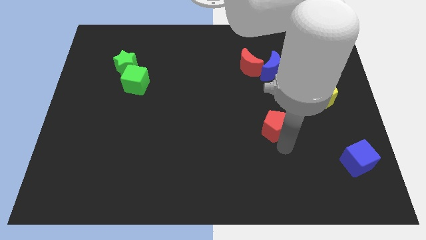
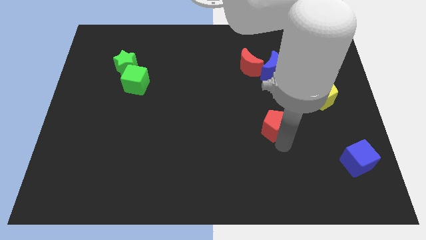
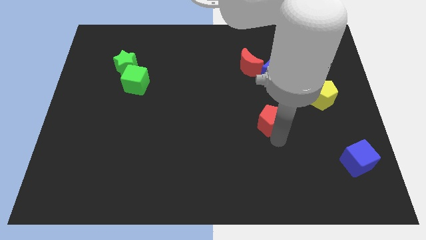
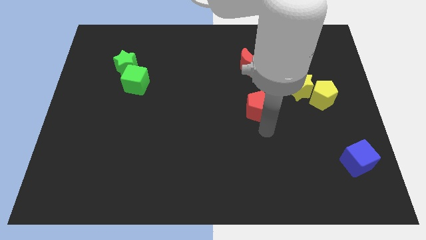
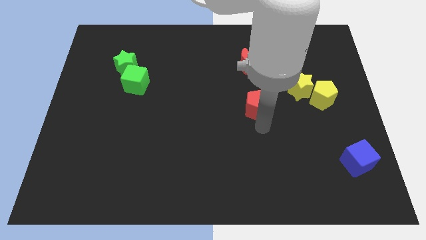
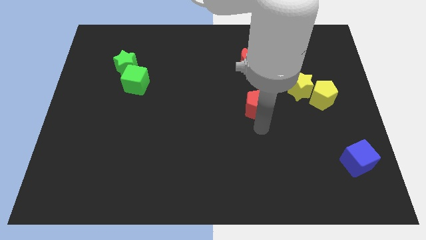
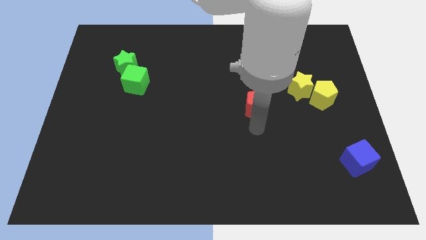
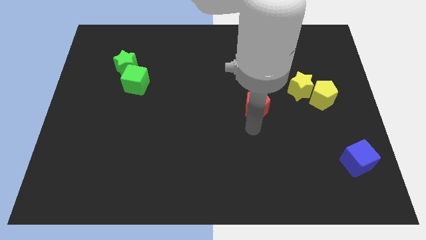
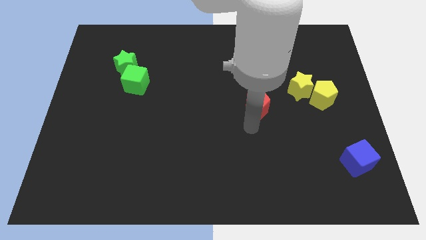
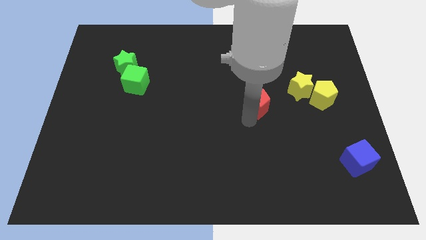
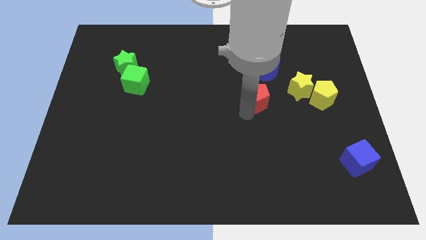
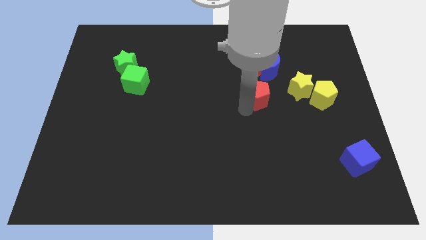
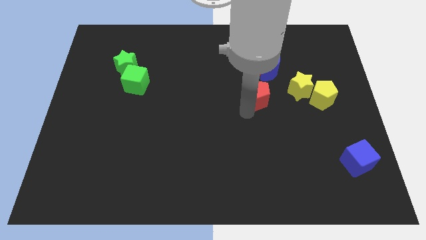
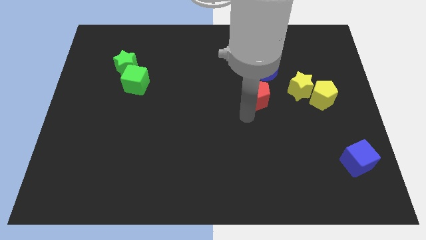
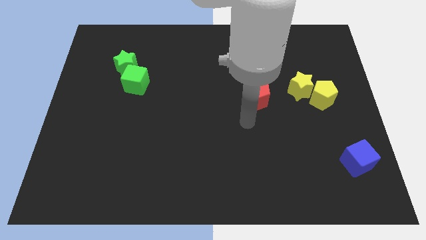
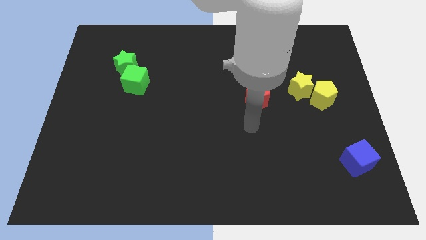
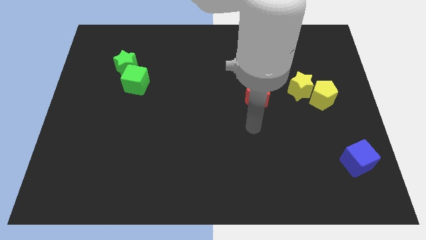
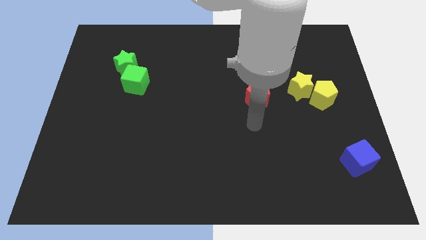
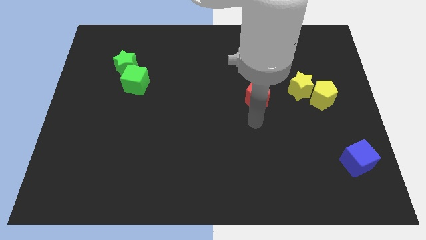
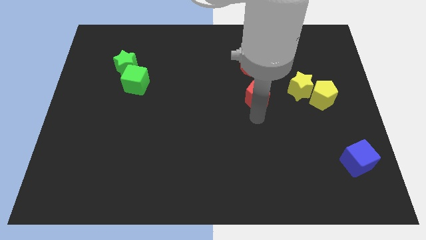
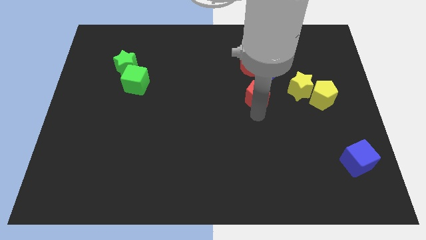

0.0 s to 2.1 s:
drag the red pentagon towards top side

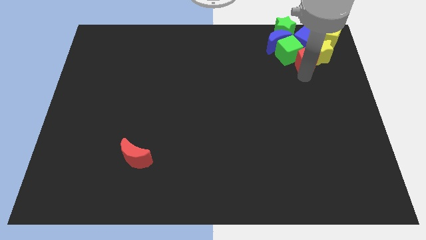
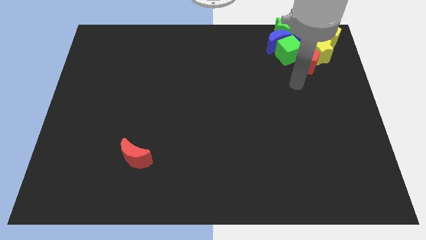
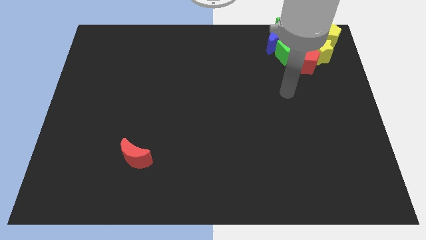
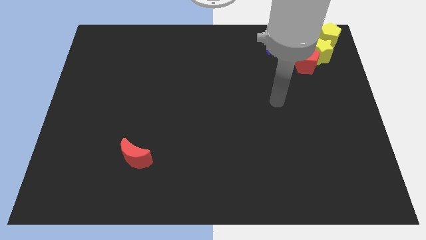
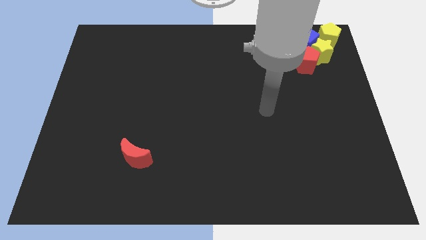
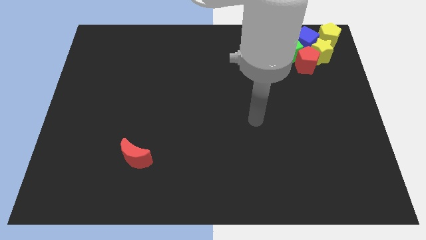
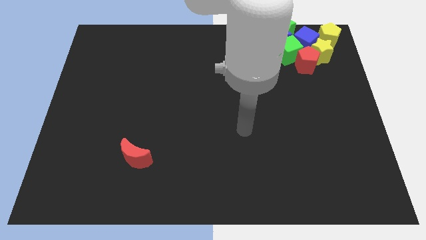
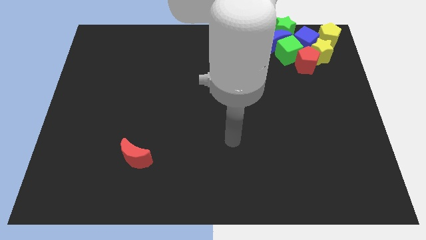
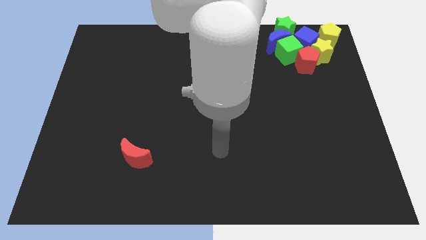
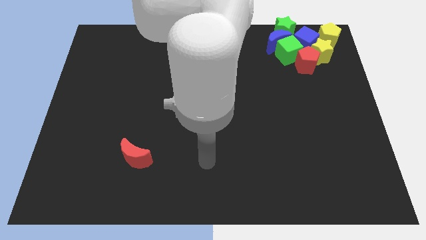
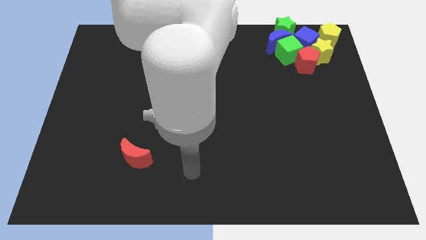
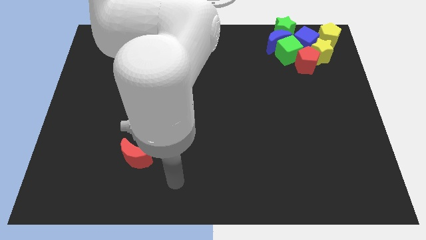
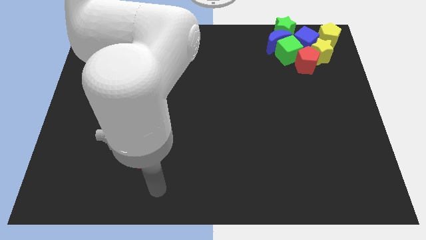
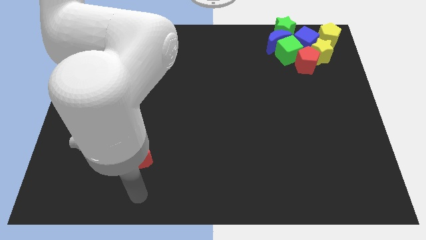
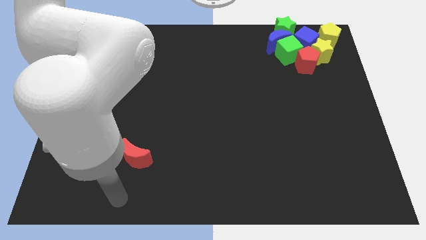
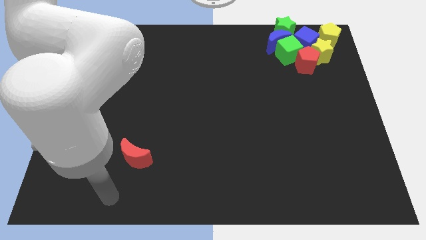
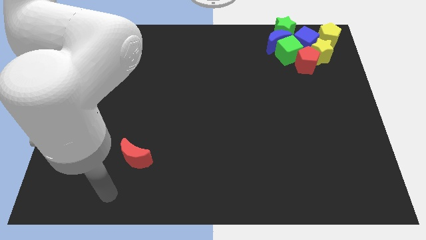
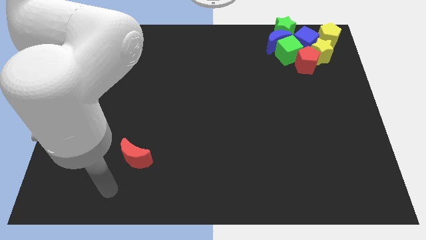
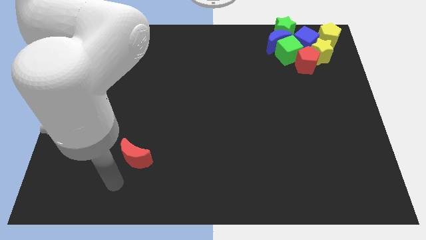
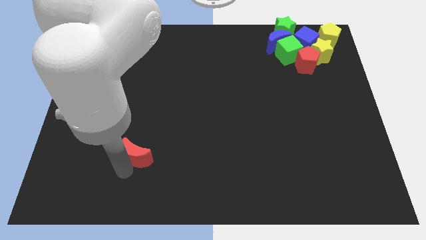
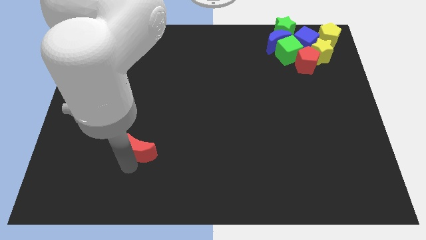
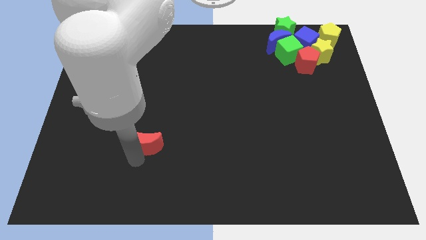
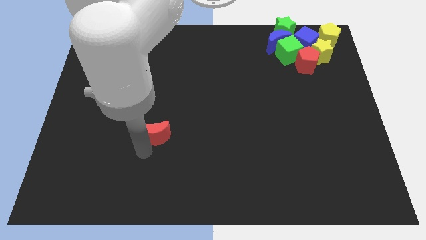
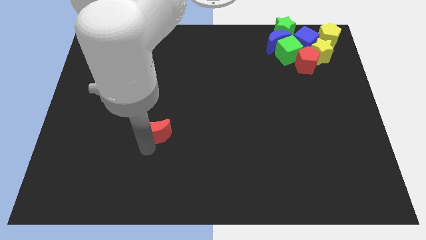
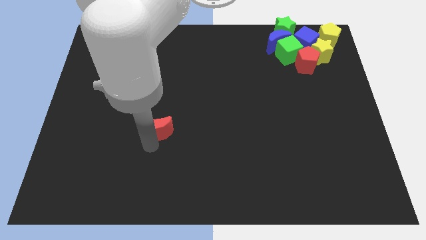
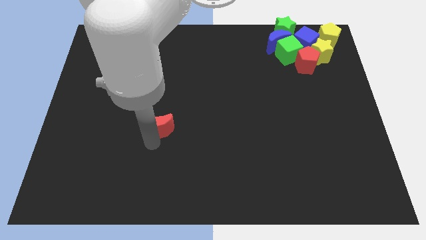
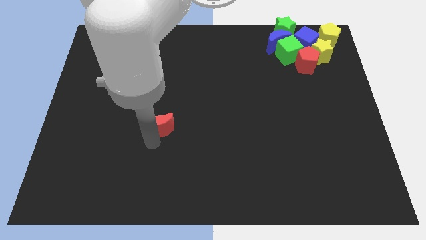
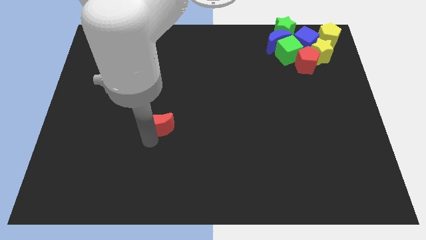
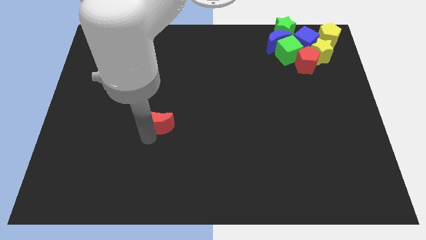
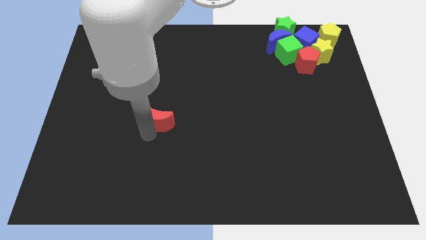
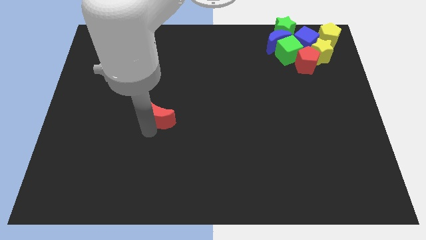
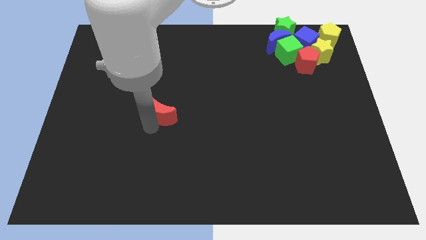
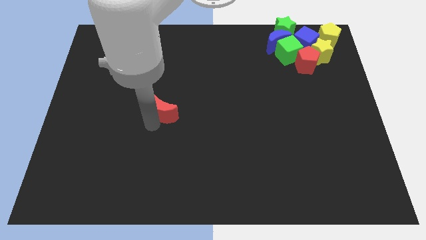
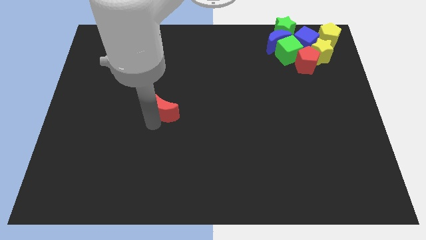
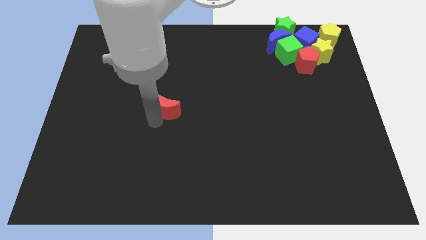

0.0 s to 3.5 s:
move red crescent upwards

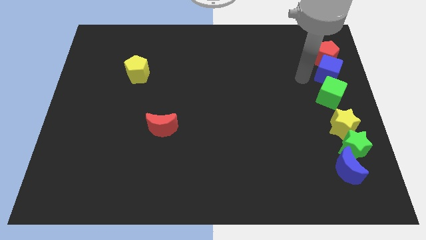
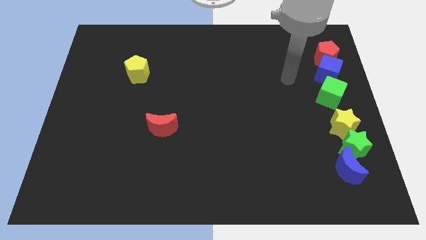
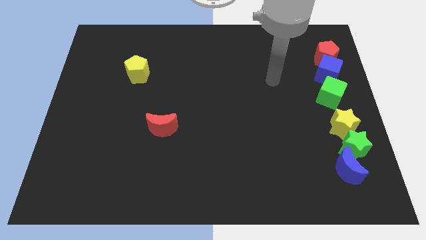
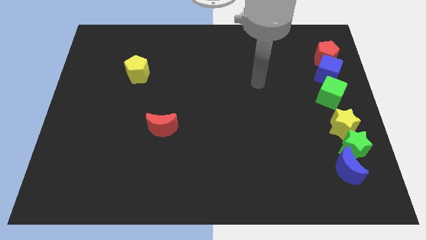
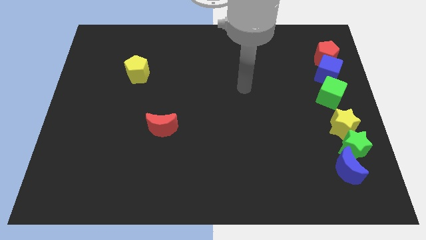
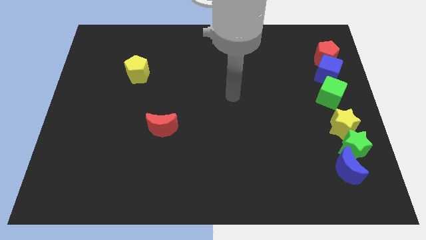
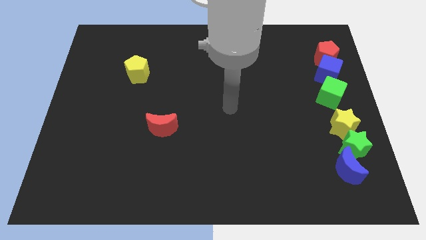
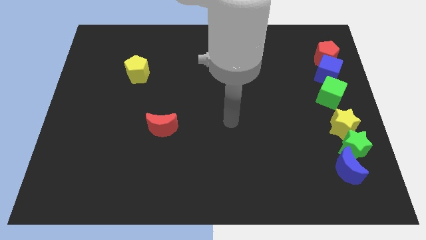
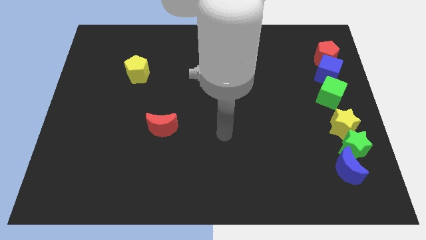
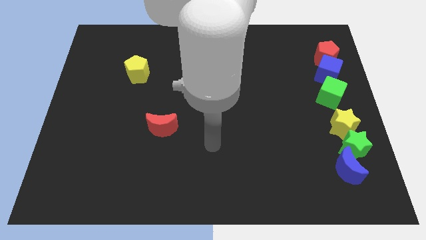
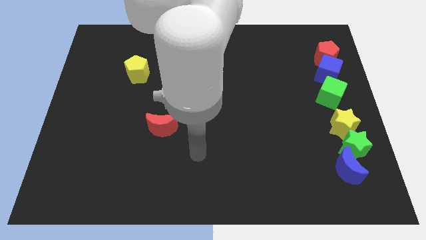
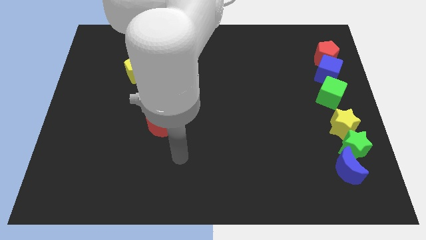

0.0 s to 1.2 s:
push your hand away from the red pentagon

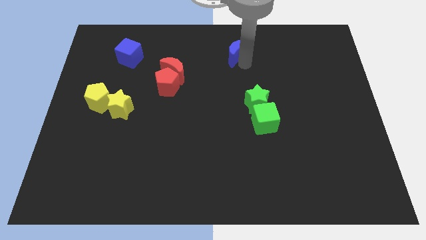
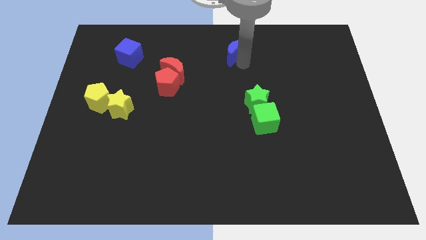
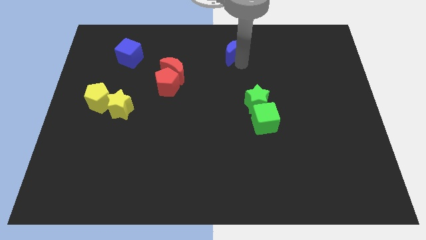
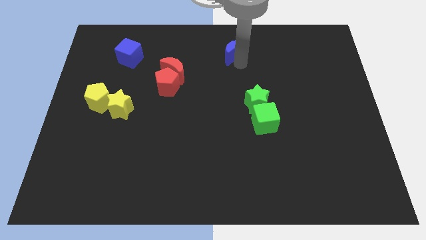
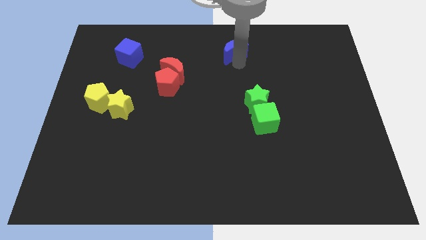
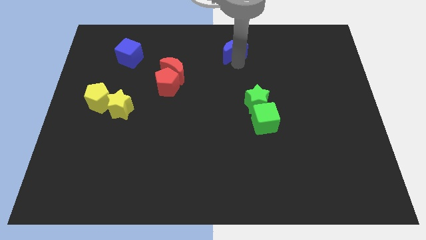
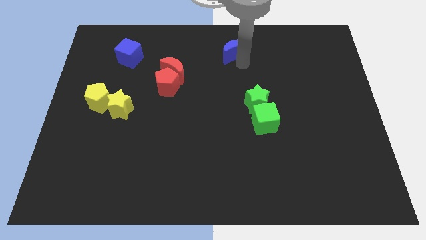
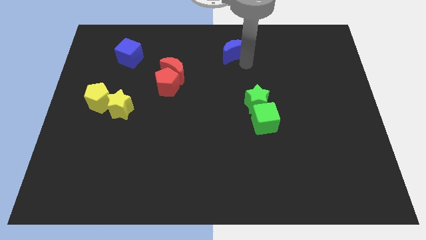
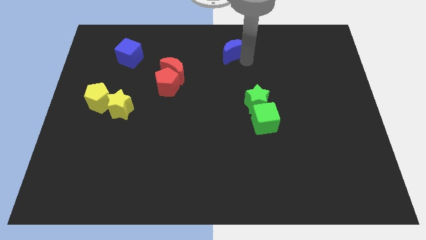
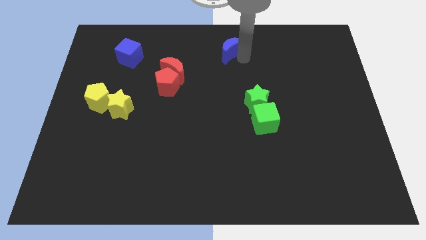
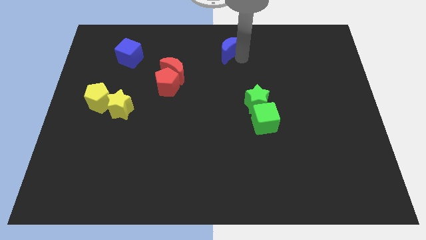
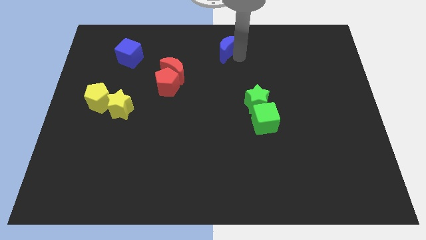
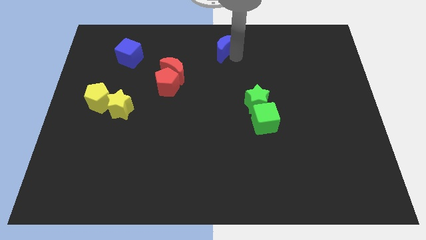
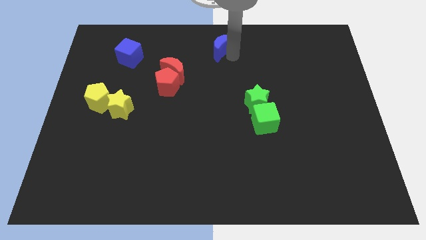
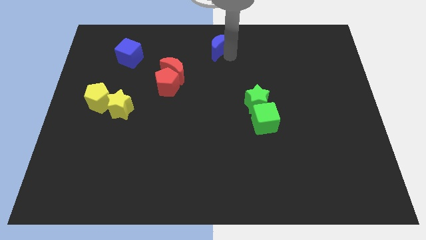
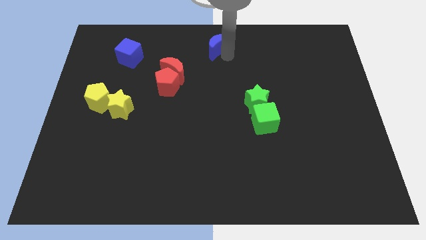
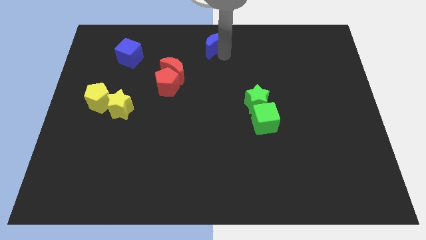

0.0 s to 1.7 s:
place blue moon to the top center of the board

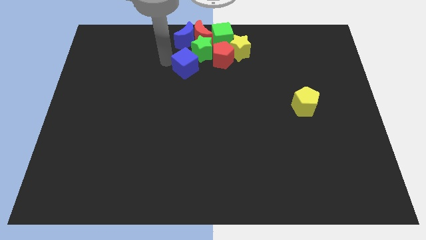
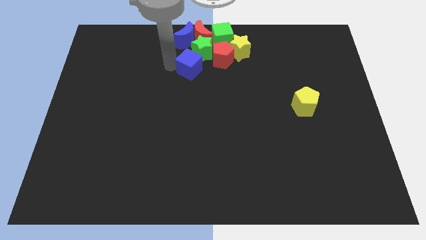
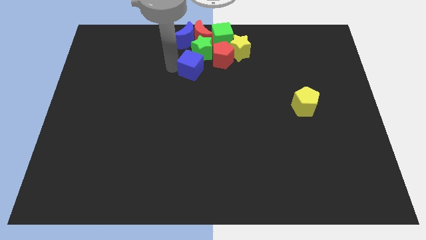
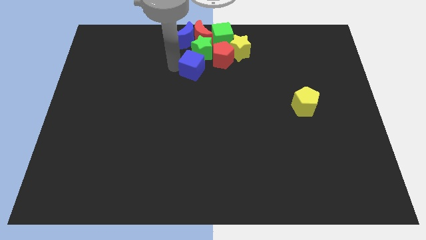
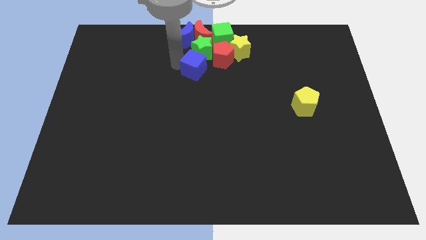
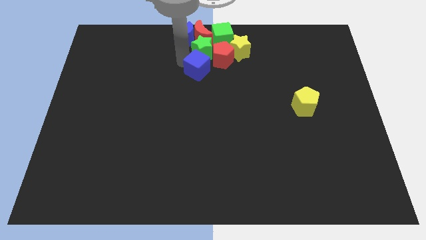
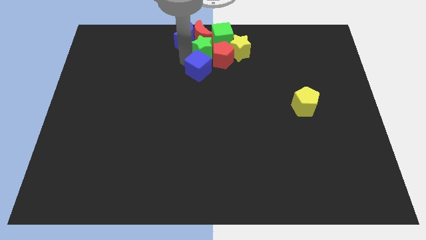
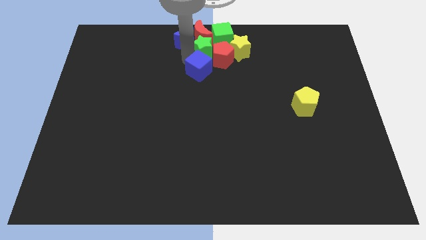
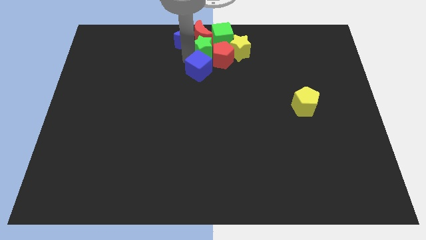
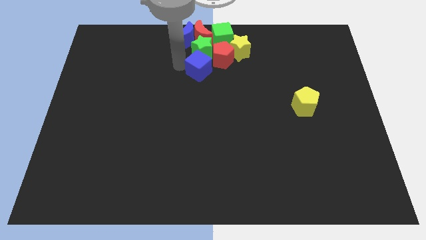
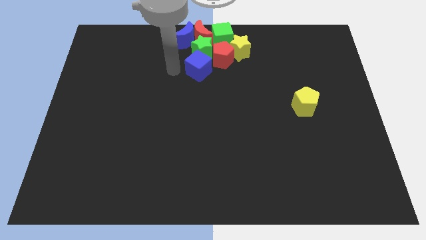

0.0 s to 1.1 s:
move the blue cube towards the green star
